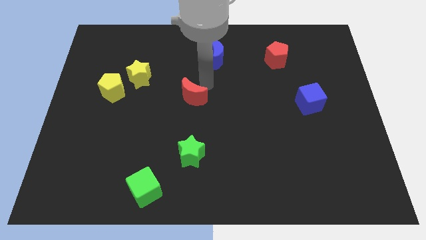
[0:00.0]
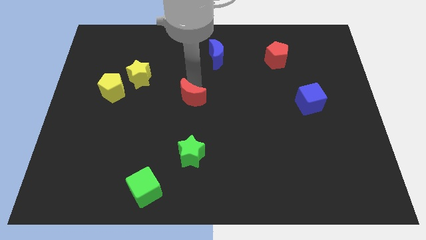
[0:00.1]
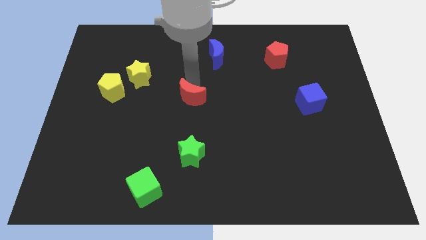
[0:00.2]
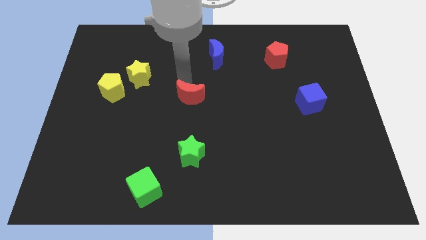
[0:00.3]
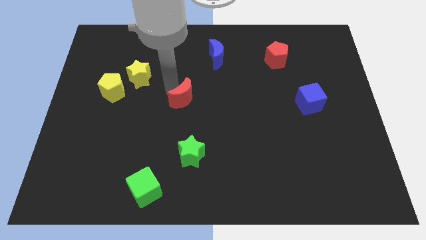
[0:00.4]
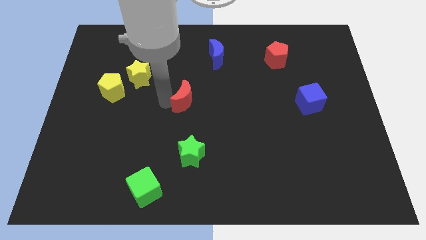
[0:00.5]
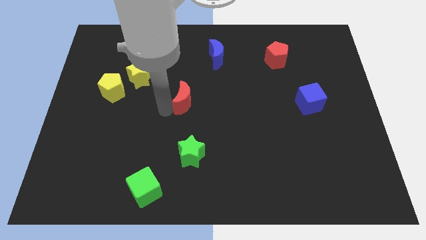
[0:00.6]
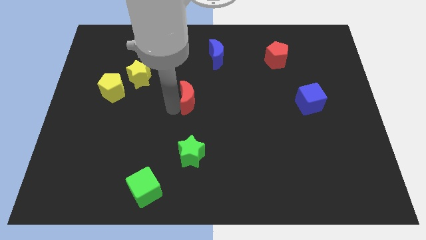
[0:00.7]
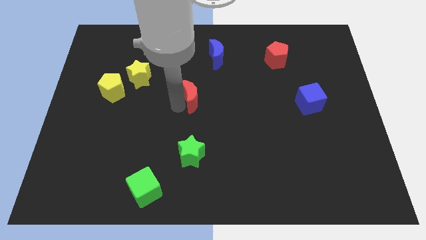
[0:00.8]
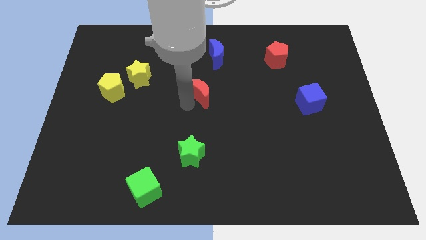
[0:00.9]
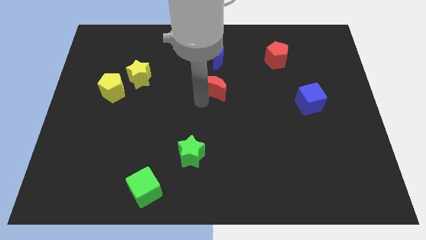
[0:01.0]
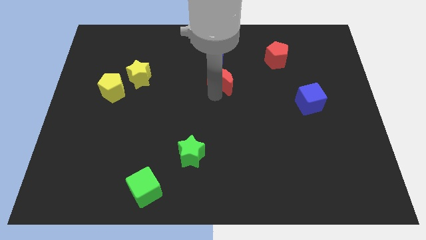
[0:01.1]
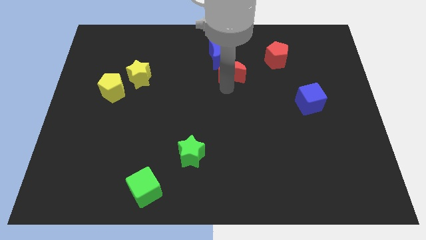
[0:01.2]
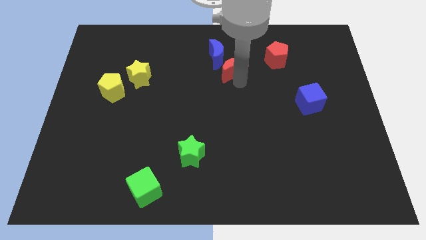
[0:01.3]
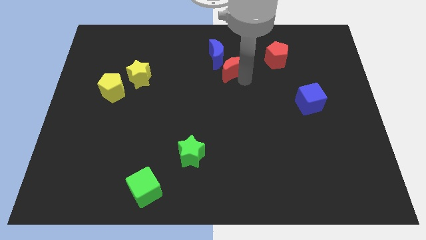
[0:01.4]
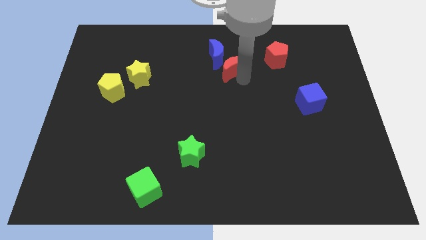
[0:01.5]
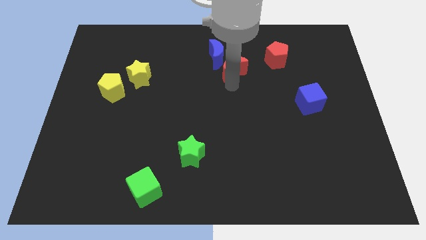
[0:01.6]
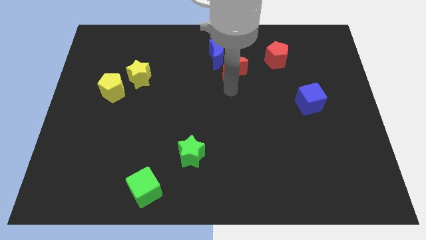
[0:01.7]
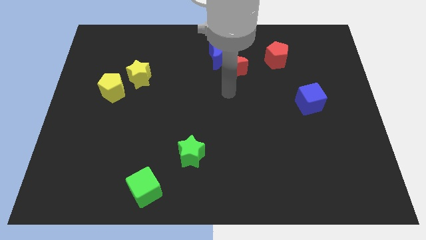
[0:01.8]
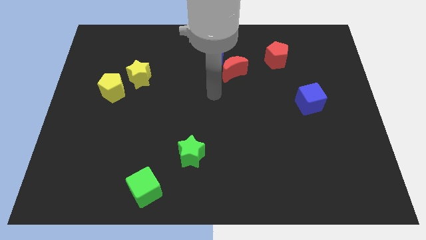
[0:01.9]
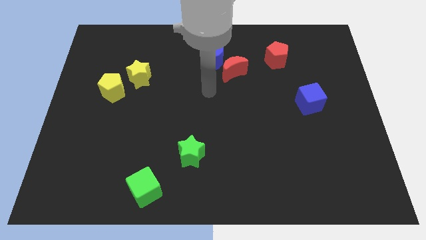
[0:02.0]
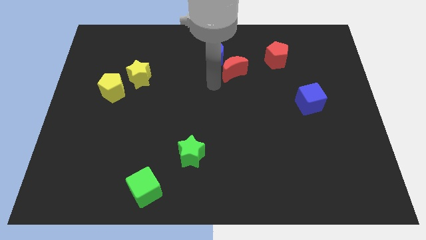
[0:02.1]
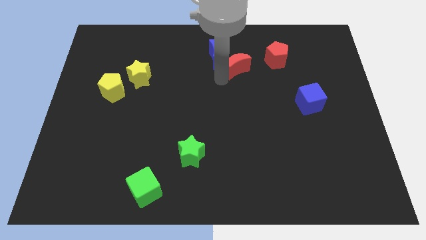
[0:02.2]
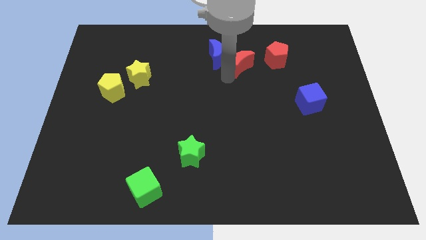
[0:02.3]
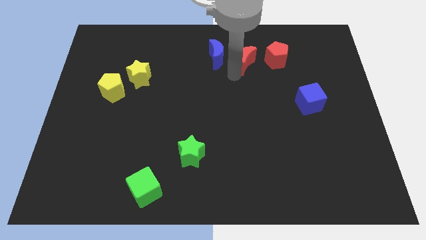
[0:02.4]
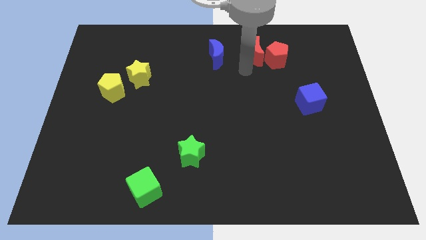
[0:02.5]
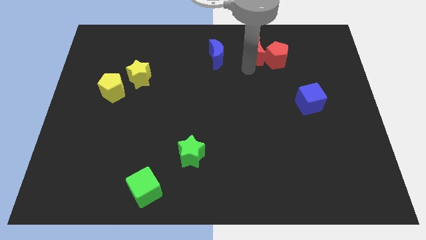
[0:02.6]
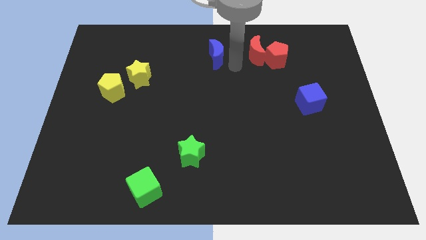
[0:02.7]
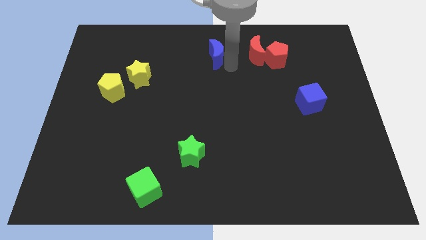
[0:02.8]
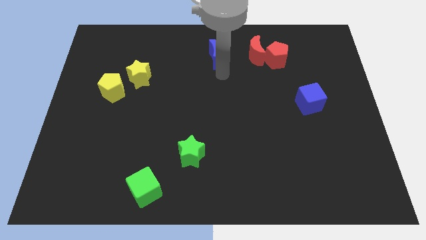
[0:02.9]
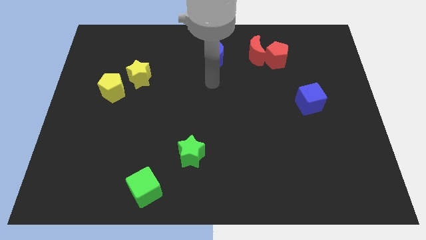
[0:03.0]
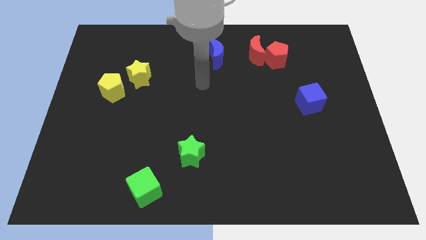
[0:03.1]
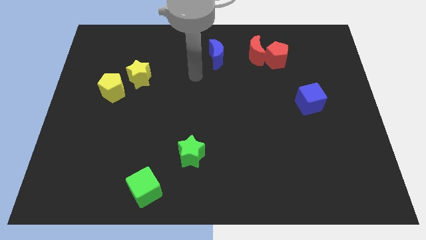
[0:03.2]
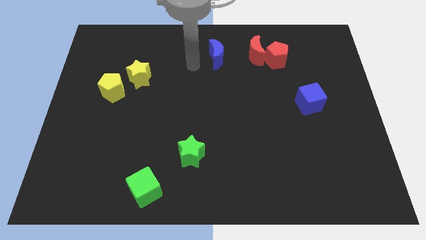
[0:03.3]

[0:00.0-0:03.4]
place the red moon close to the red pentagon

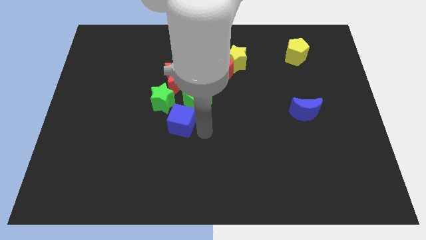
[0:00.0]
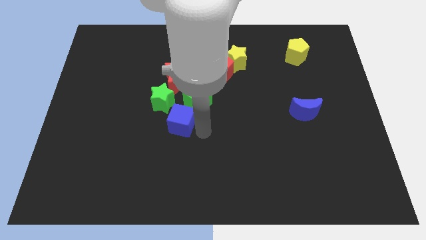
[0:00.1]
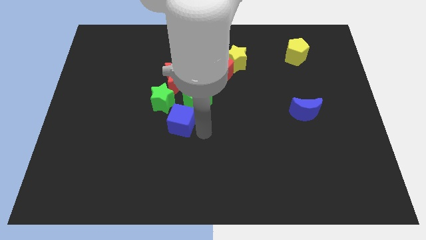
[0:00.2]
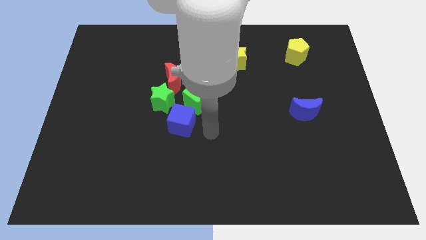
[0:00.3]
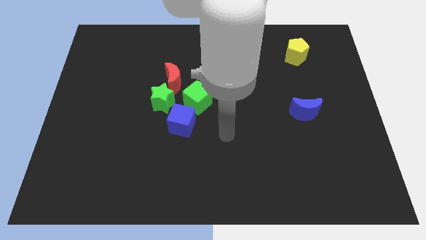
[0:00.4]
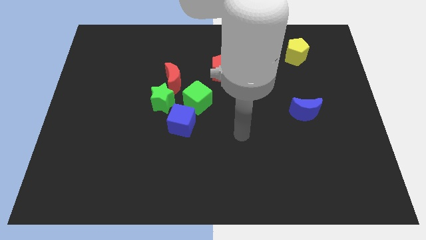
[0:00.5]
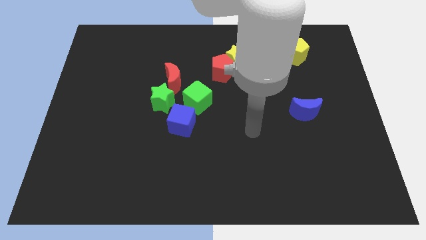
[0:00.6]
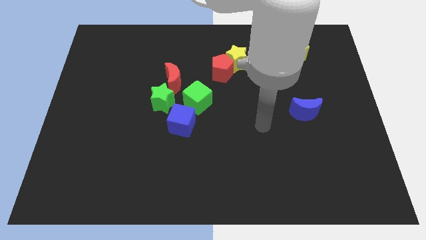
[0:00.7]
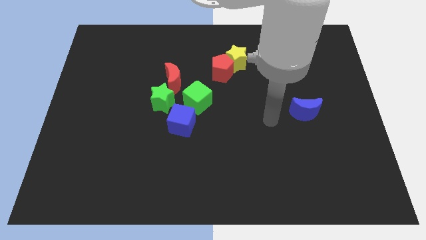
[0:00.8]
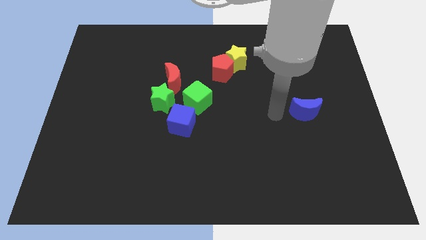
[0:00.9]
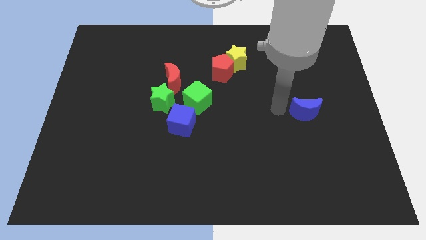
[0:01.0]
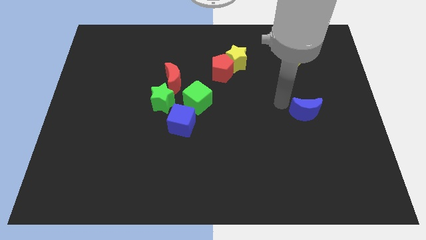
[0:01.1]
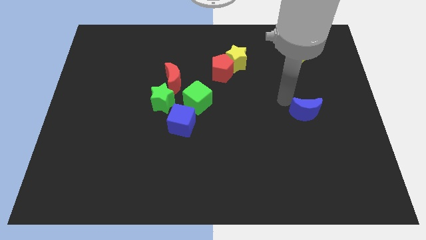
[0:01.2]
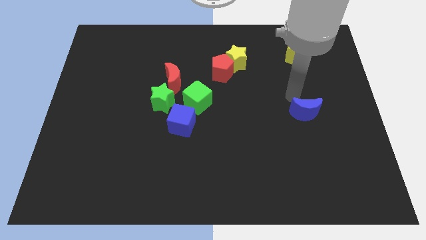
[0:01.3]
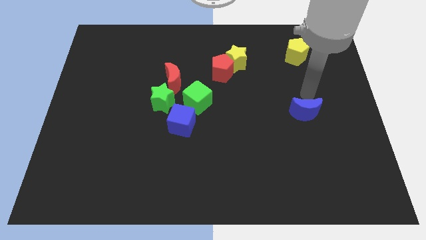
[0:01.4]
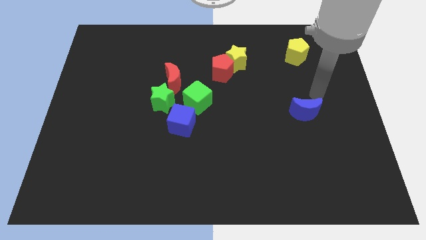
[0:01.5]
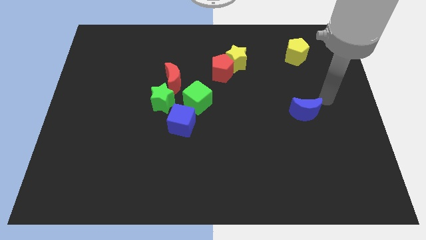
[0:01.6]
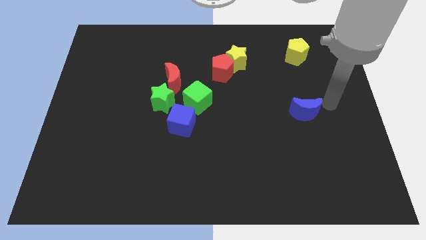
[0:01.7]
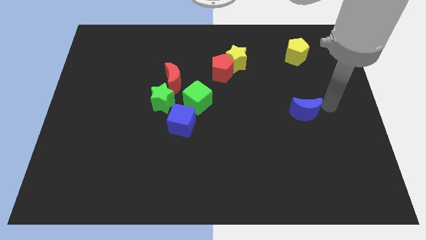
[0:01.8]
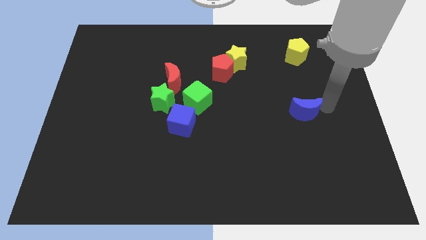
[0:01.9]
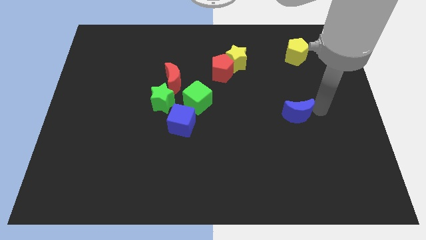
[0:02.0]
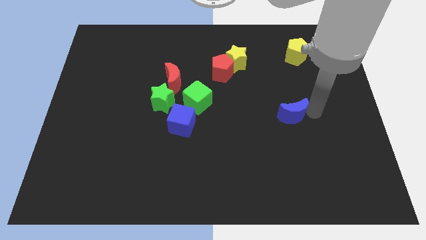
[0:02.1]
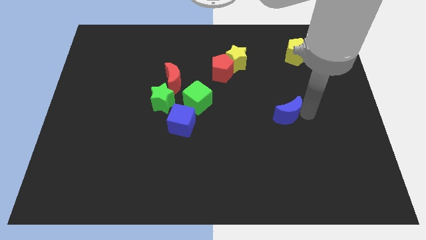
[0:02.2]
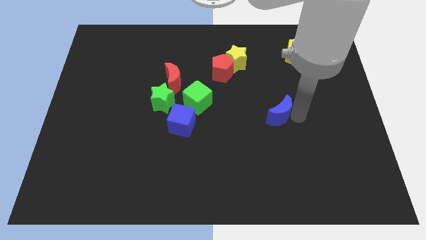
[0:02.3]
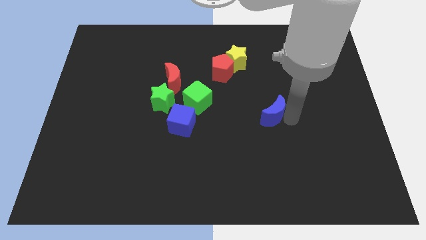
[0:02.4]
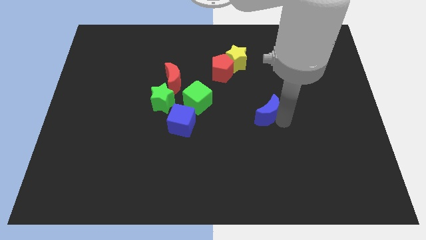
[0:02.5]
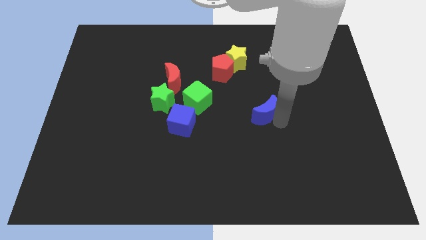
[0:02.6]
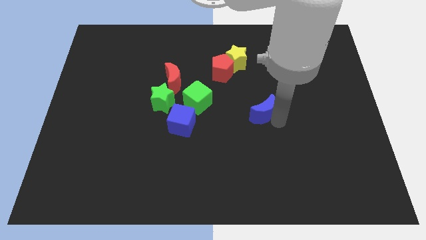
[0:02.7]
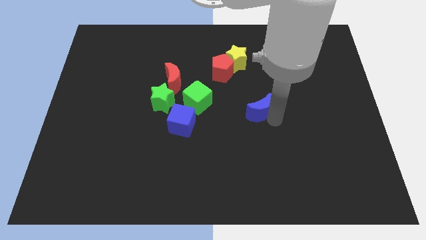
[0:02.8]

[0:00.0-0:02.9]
move the blue moon towards the green cube

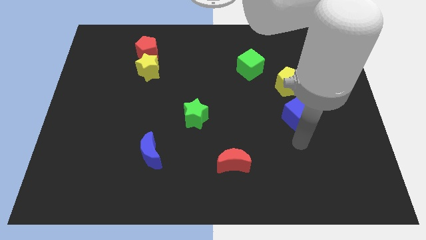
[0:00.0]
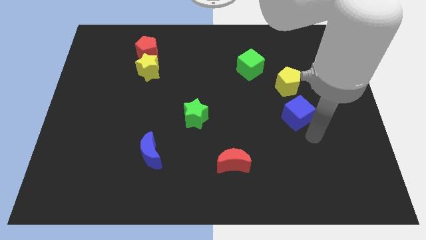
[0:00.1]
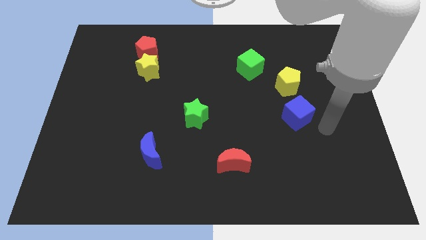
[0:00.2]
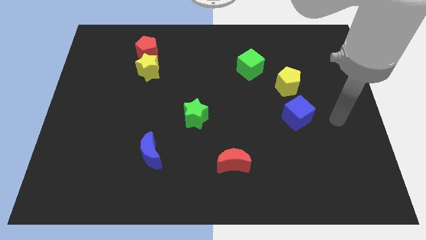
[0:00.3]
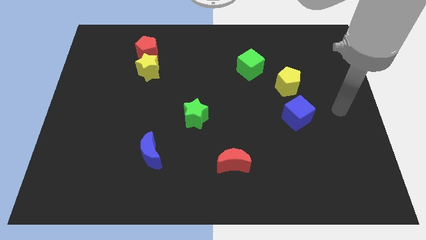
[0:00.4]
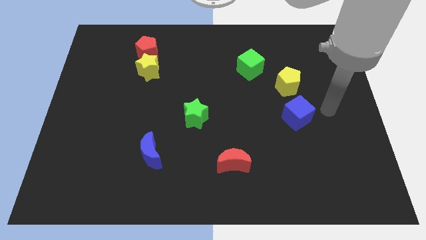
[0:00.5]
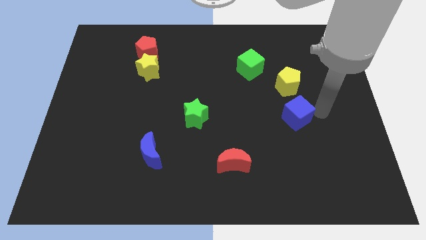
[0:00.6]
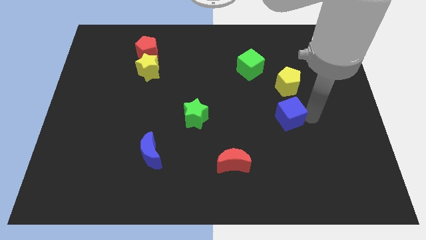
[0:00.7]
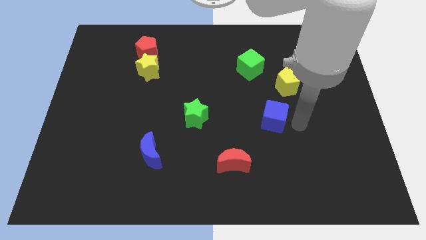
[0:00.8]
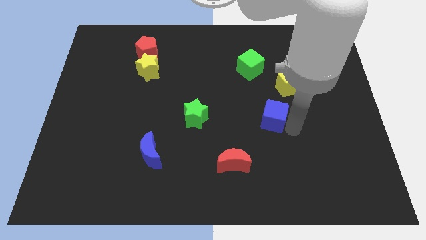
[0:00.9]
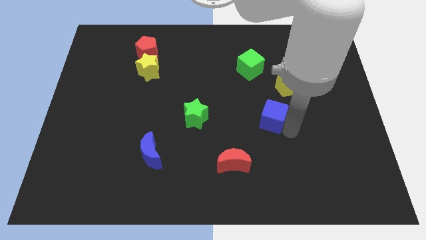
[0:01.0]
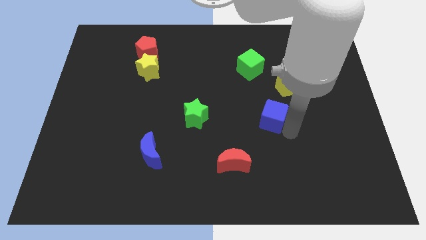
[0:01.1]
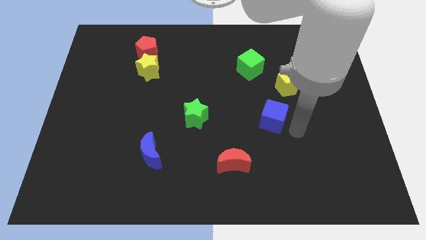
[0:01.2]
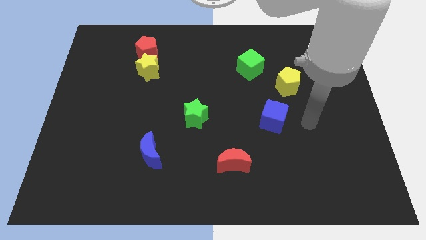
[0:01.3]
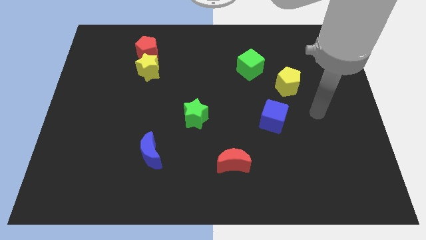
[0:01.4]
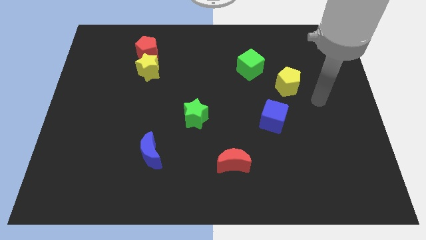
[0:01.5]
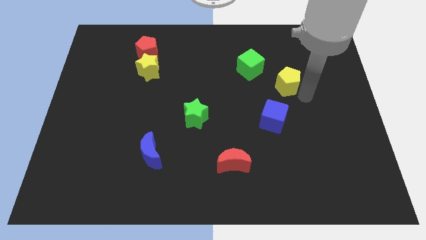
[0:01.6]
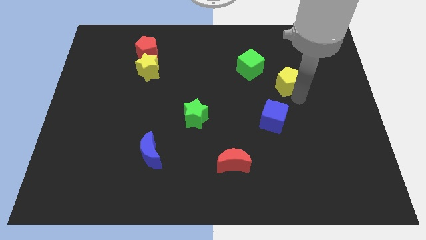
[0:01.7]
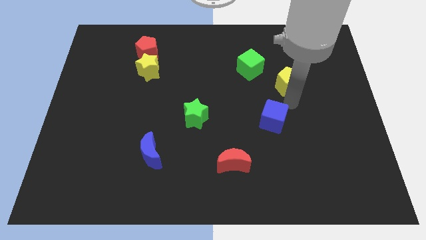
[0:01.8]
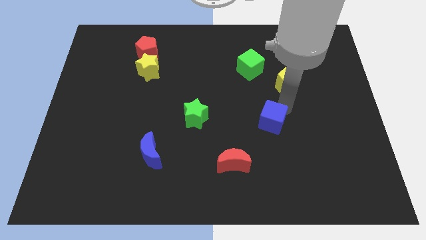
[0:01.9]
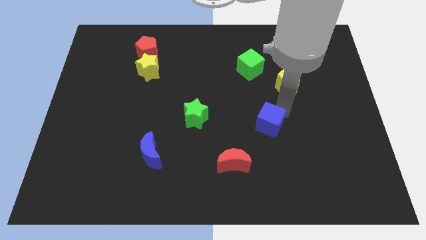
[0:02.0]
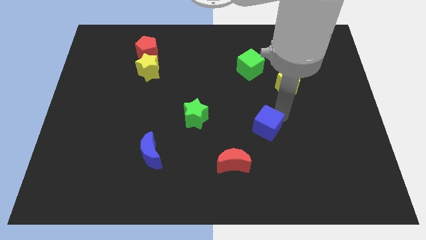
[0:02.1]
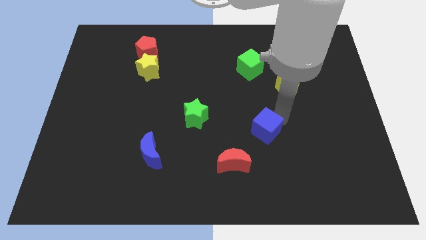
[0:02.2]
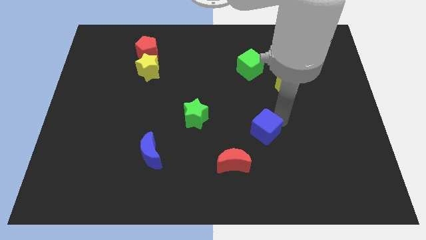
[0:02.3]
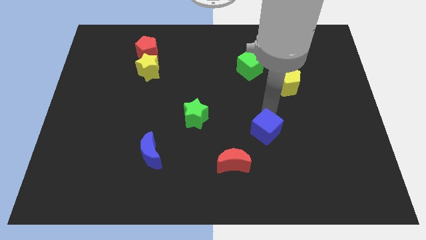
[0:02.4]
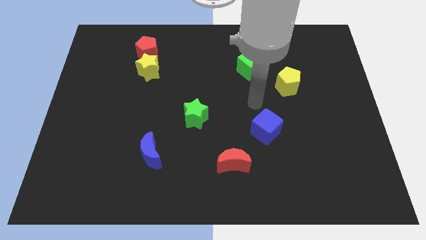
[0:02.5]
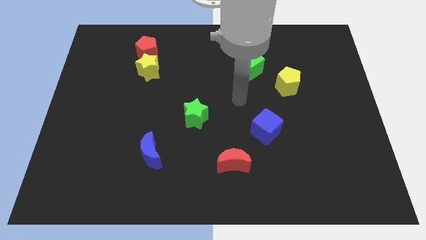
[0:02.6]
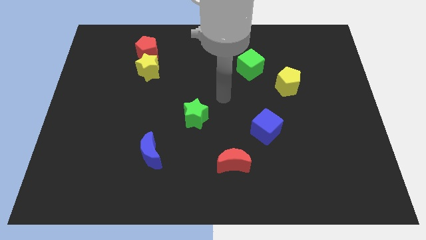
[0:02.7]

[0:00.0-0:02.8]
move the blue cube into the red crescent
